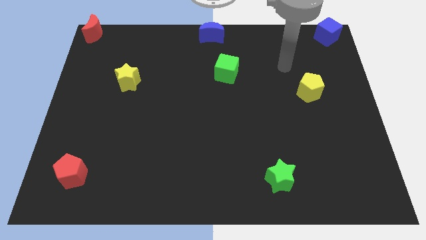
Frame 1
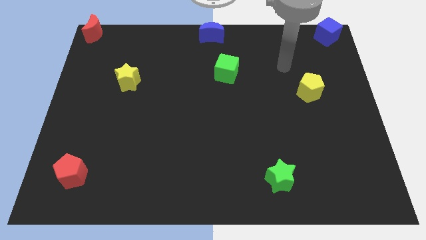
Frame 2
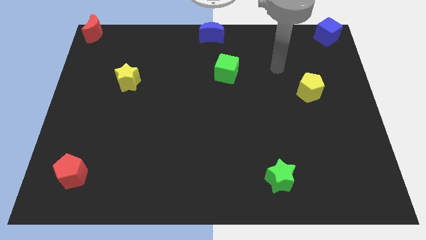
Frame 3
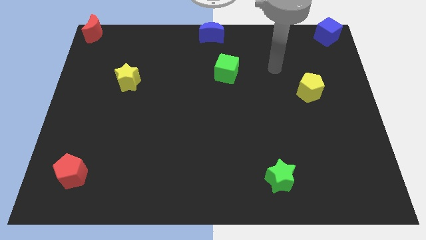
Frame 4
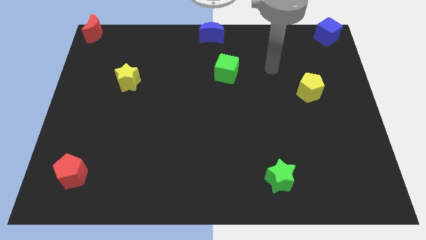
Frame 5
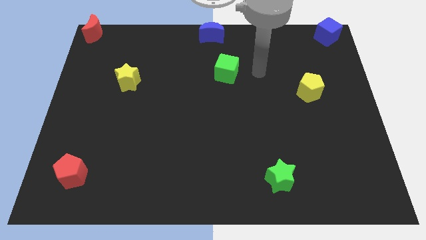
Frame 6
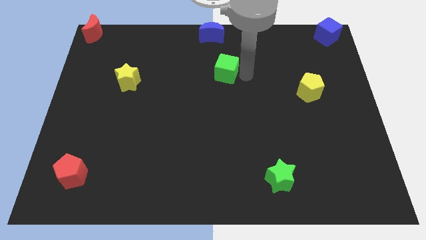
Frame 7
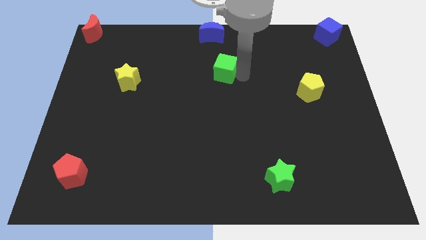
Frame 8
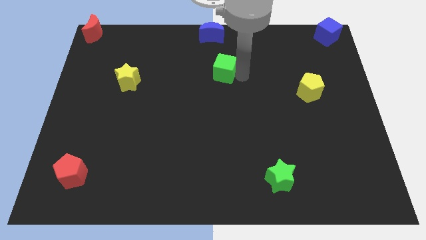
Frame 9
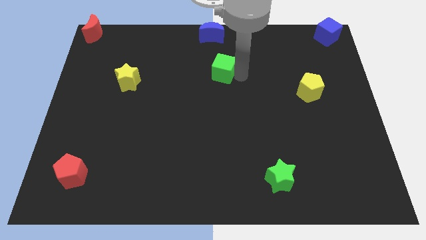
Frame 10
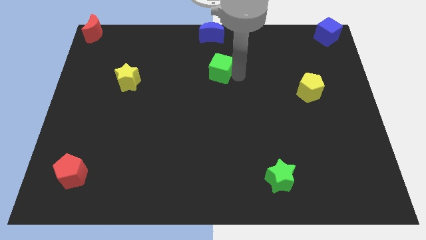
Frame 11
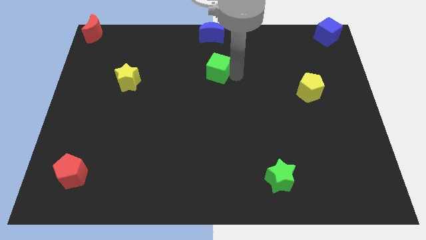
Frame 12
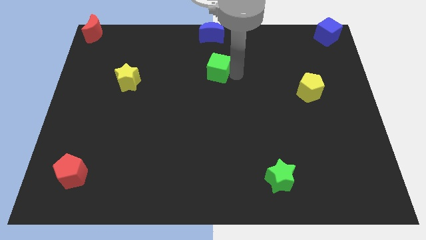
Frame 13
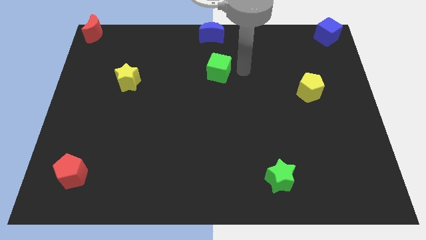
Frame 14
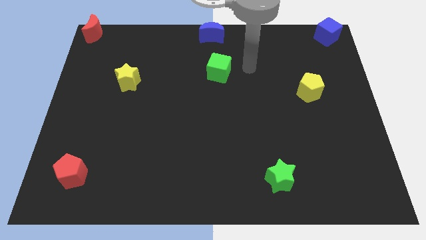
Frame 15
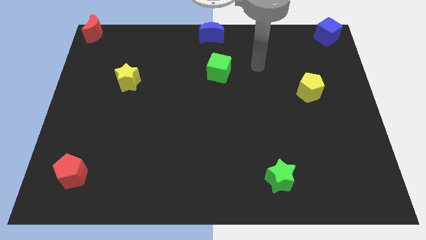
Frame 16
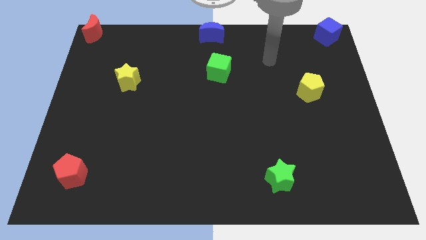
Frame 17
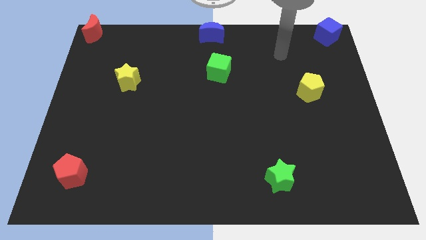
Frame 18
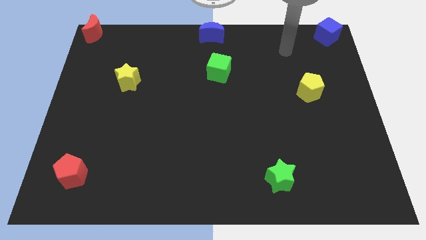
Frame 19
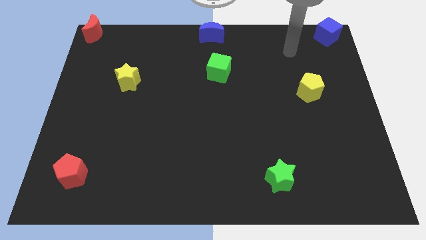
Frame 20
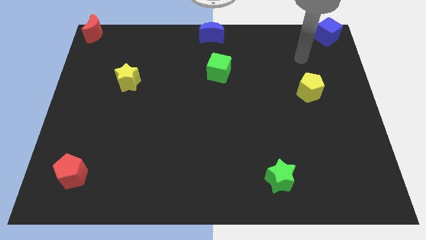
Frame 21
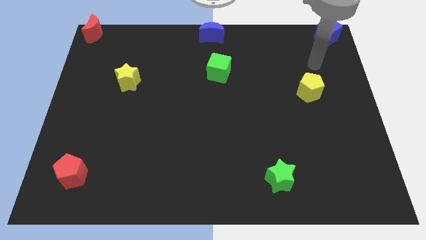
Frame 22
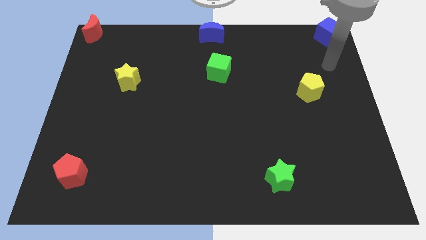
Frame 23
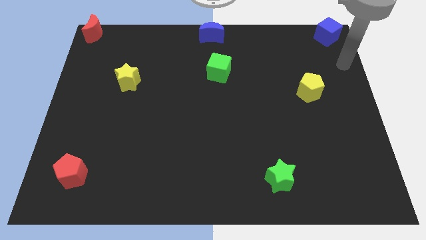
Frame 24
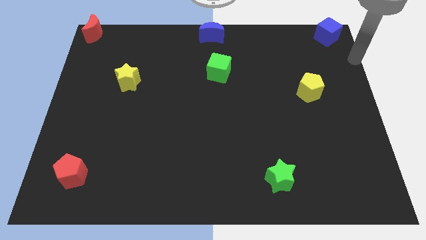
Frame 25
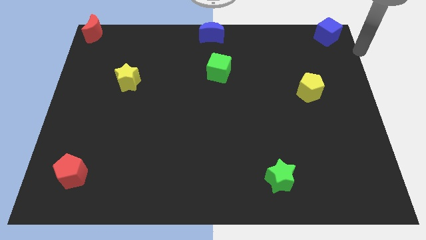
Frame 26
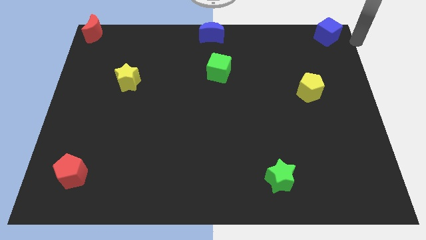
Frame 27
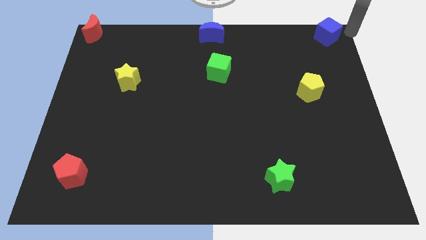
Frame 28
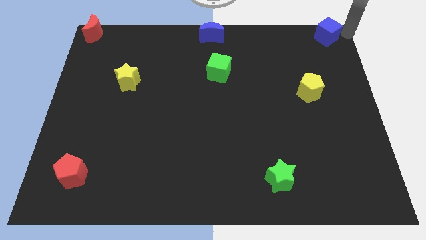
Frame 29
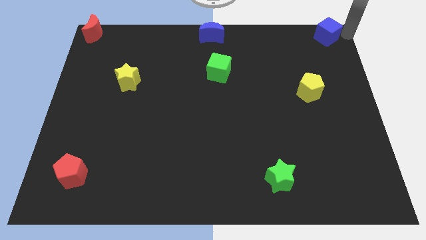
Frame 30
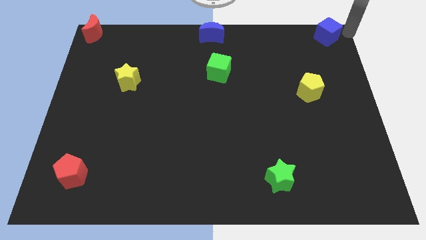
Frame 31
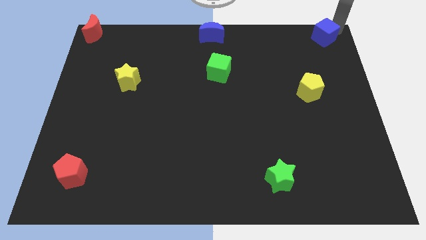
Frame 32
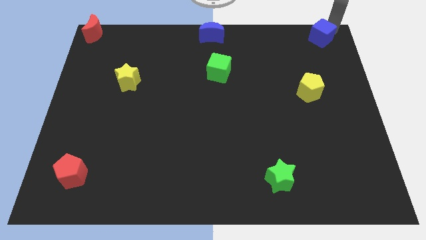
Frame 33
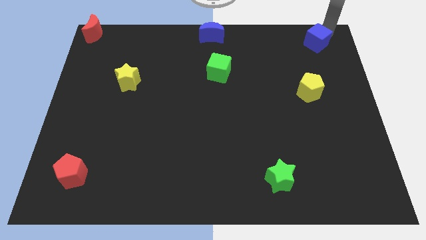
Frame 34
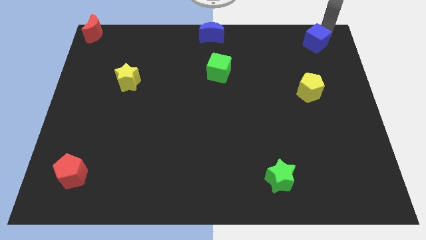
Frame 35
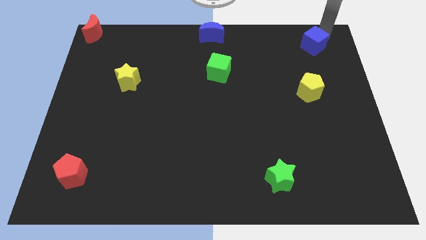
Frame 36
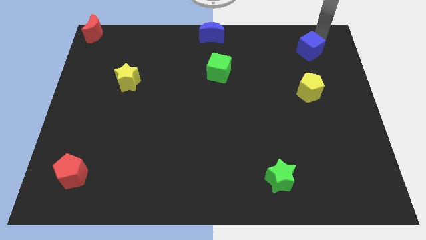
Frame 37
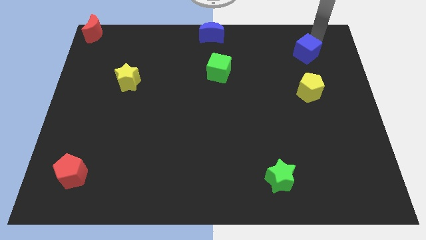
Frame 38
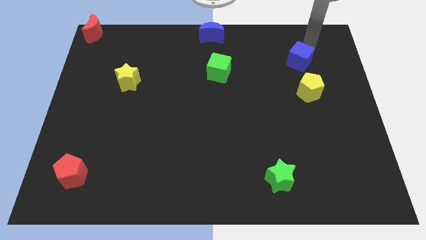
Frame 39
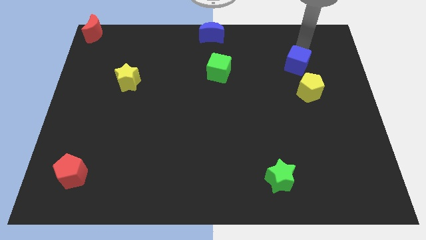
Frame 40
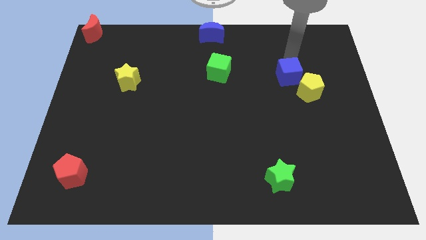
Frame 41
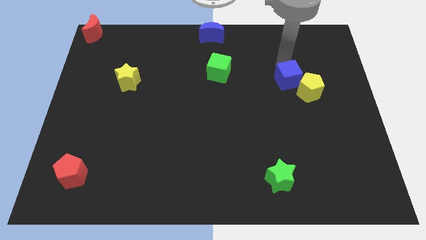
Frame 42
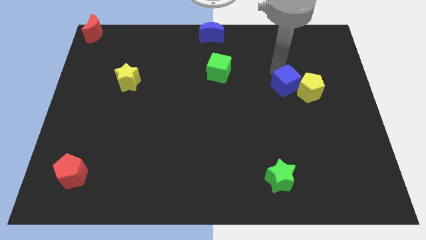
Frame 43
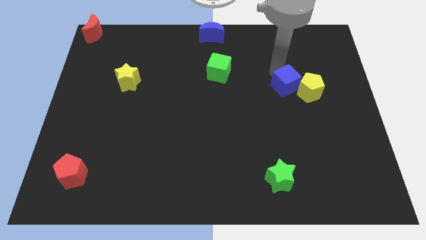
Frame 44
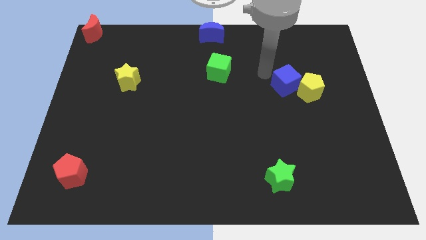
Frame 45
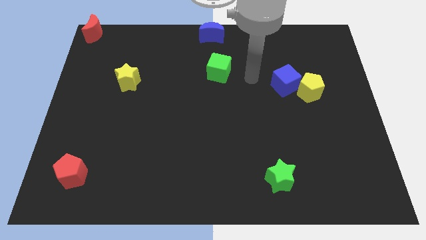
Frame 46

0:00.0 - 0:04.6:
push the blue cube at the top of the green star

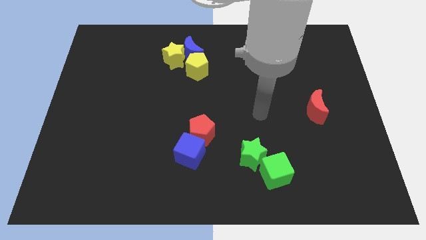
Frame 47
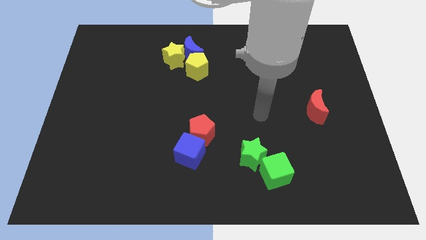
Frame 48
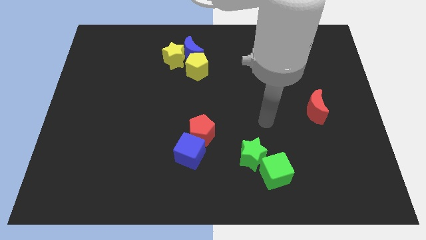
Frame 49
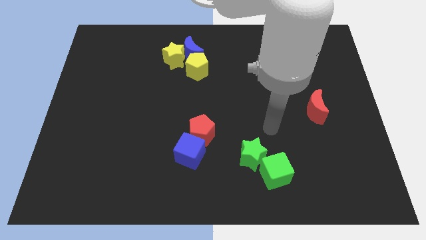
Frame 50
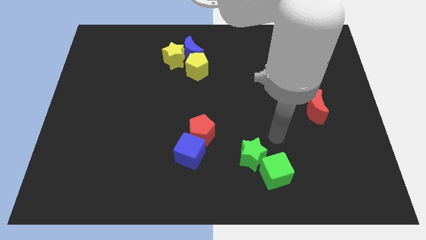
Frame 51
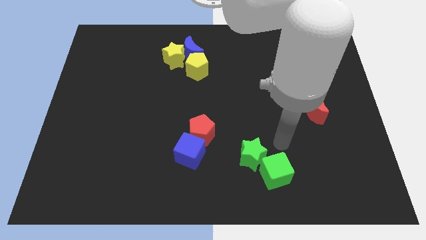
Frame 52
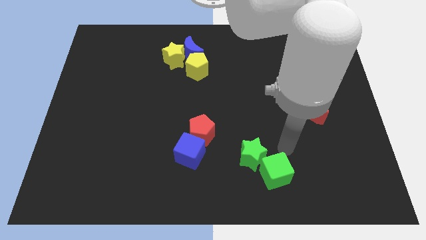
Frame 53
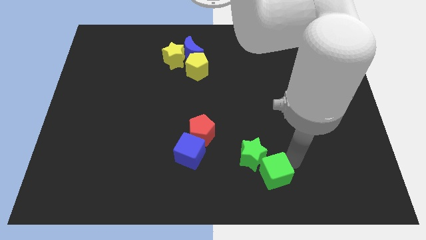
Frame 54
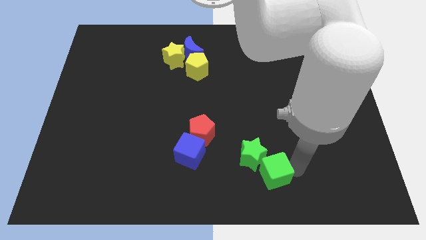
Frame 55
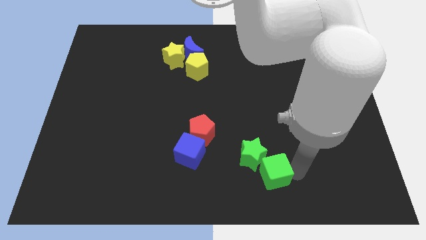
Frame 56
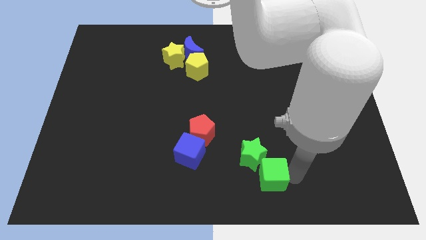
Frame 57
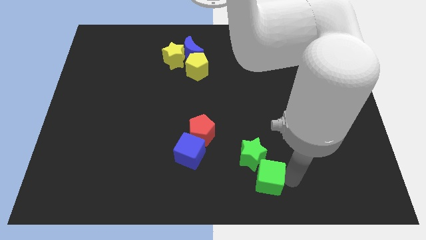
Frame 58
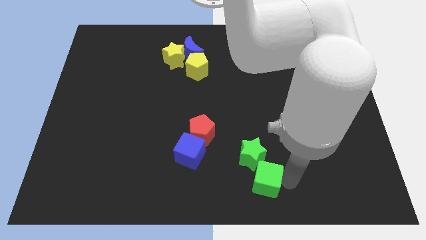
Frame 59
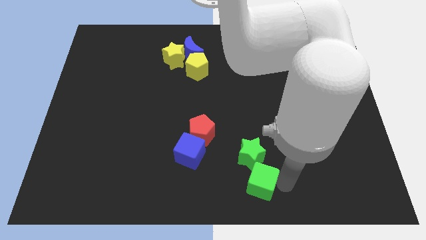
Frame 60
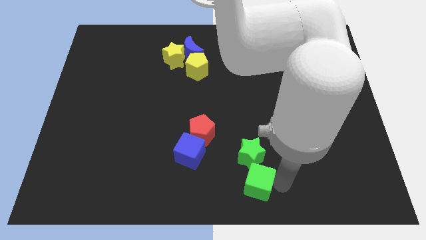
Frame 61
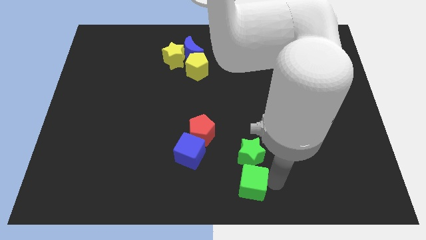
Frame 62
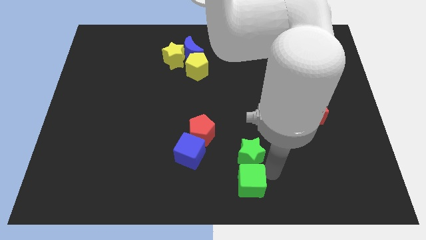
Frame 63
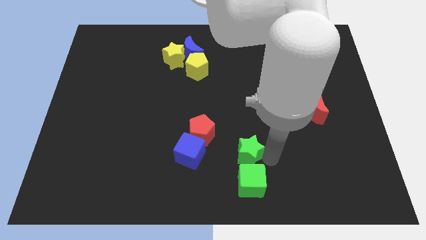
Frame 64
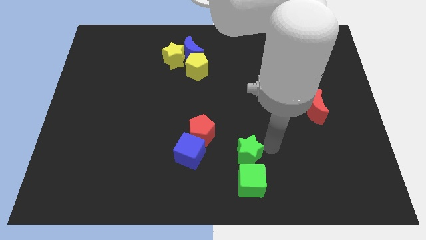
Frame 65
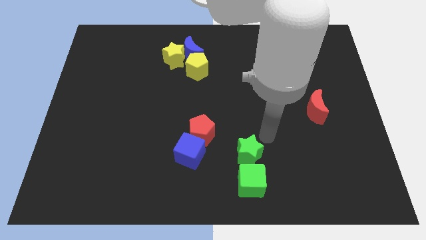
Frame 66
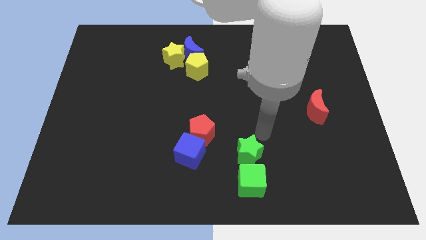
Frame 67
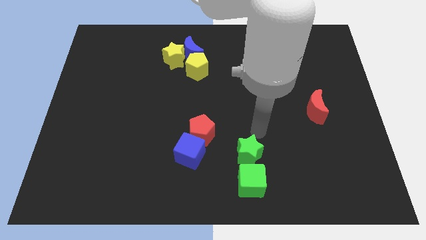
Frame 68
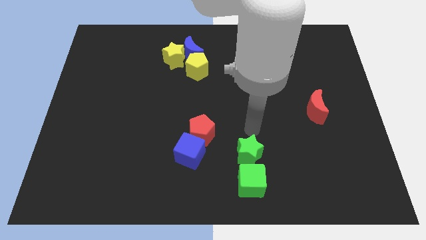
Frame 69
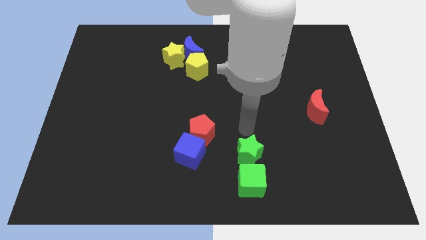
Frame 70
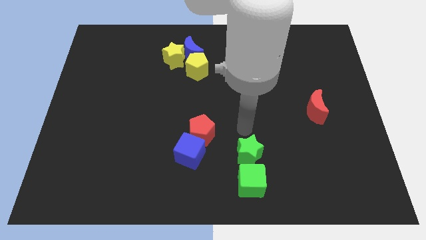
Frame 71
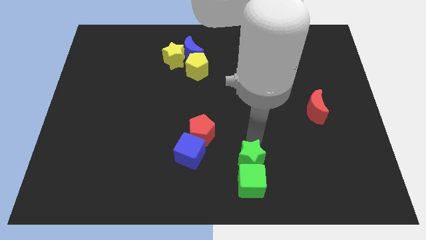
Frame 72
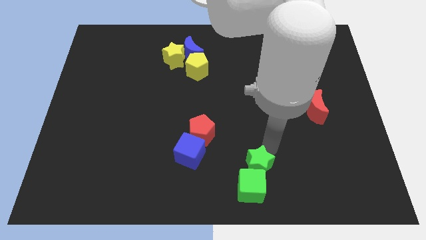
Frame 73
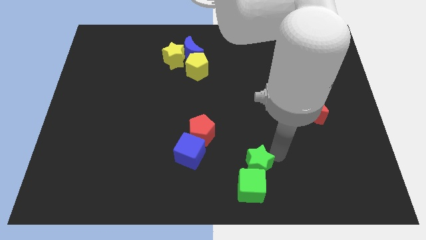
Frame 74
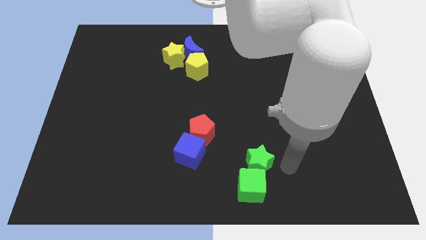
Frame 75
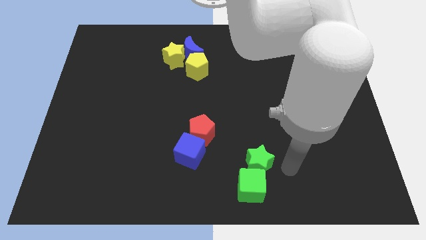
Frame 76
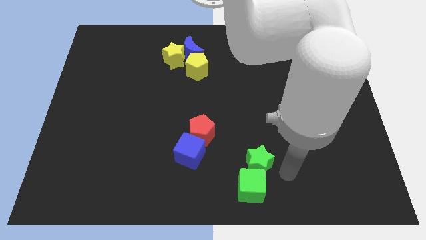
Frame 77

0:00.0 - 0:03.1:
push the group of green blocks towards the bottom center

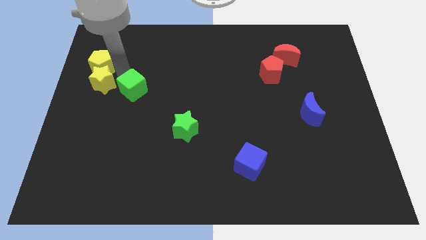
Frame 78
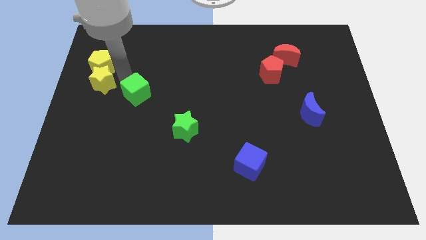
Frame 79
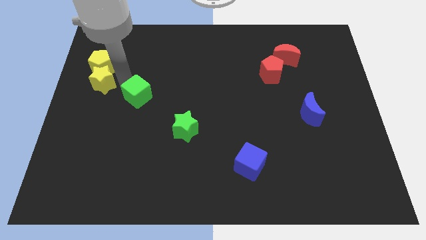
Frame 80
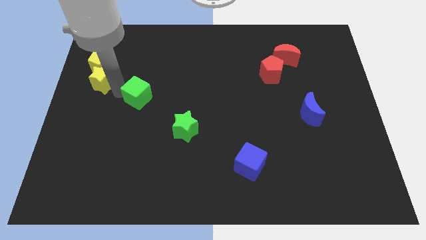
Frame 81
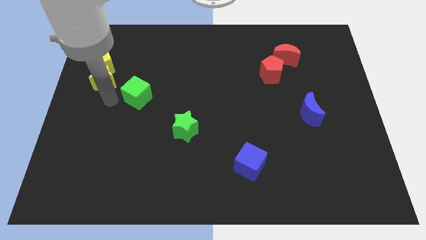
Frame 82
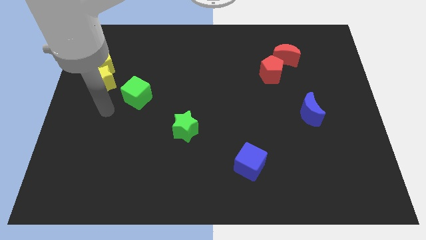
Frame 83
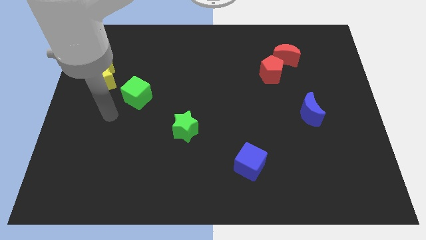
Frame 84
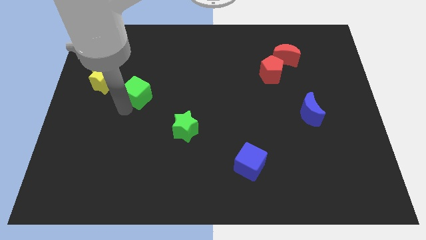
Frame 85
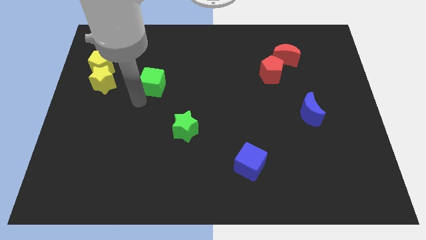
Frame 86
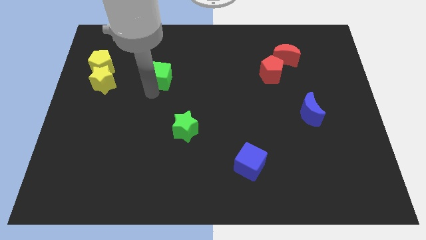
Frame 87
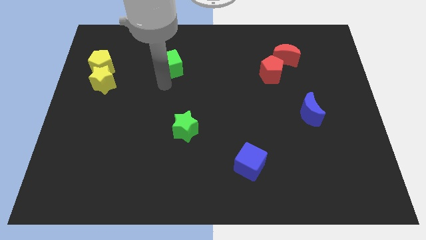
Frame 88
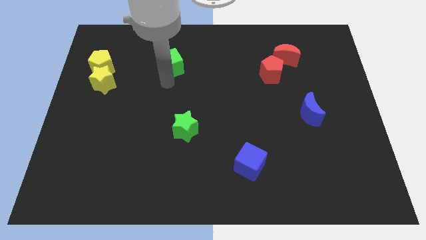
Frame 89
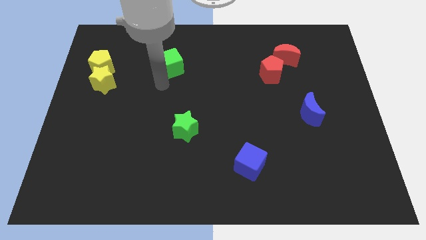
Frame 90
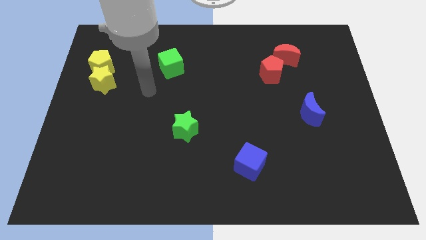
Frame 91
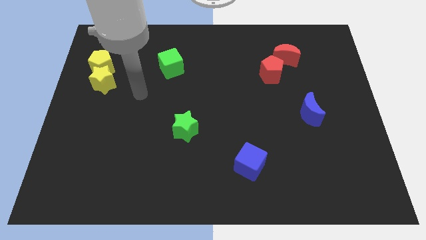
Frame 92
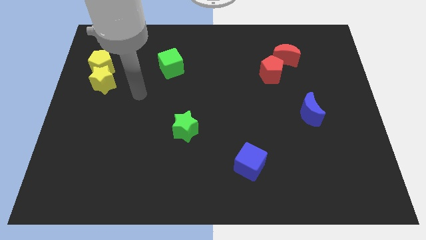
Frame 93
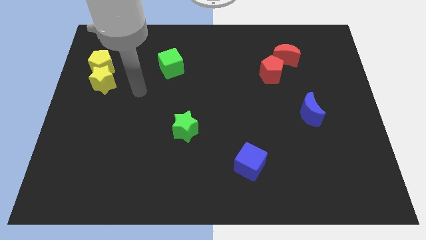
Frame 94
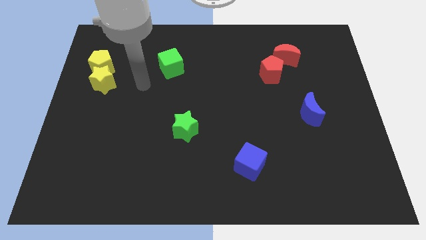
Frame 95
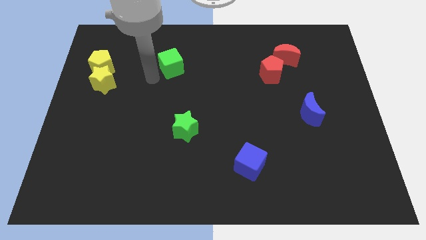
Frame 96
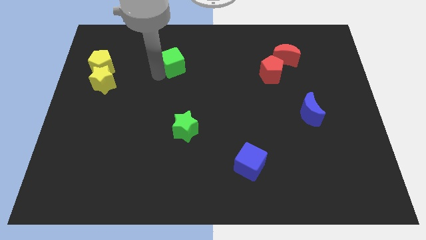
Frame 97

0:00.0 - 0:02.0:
move the green cube to the right of the yellow pentagon
